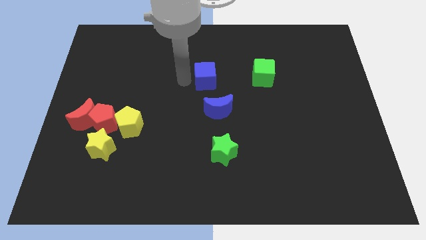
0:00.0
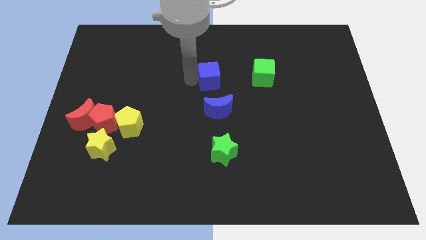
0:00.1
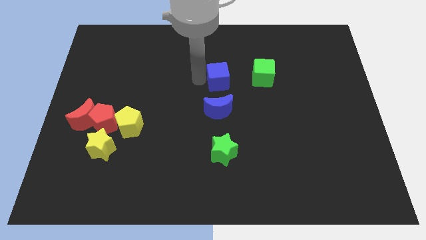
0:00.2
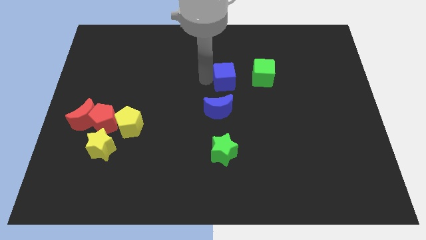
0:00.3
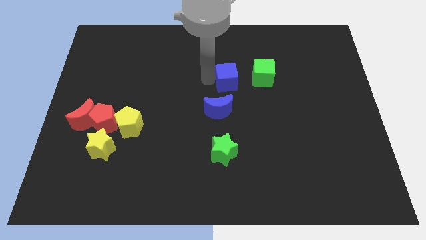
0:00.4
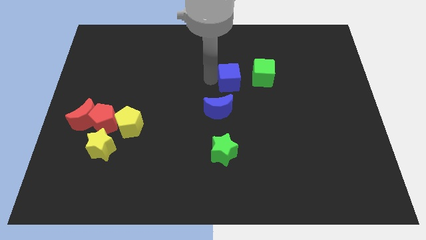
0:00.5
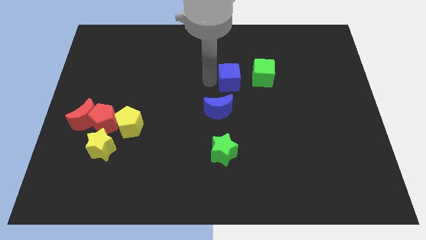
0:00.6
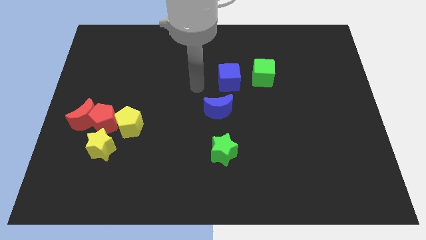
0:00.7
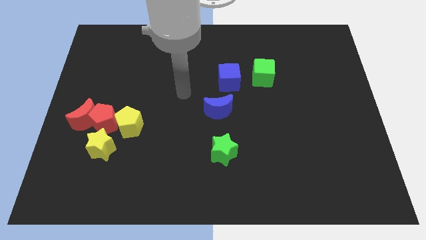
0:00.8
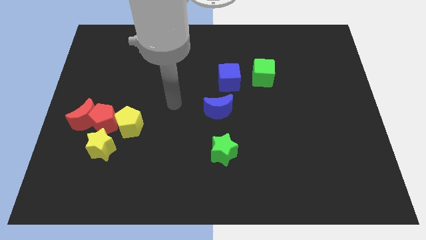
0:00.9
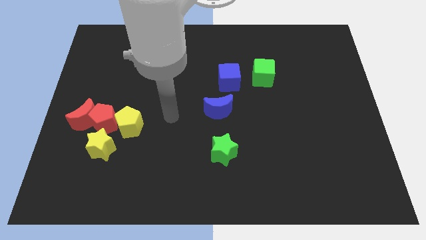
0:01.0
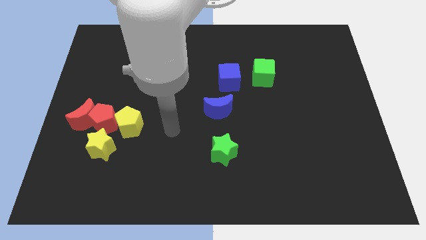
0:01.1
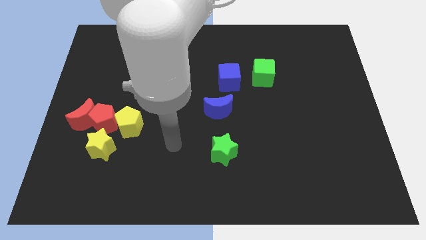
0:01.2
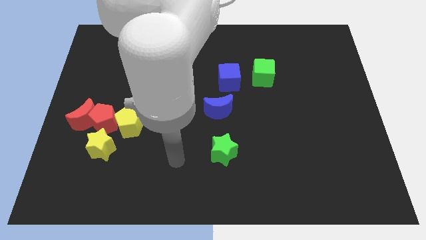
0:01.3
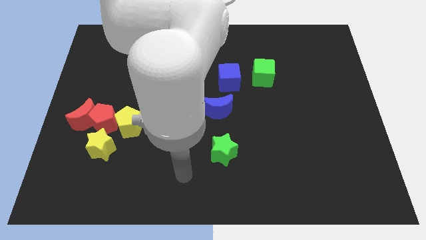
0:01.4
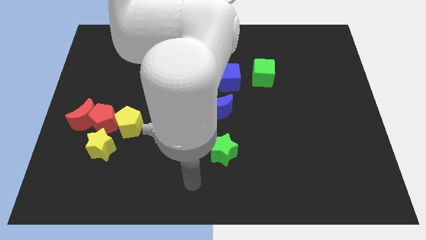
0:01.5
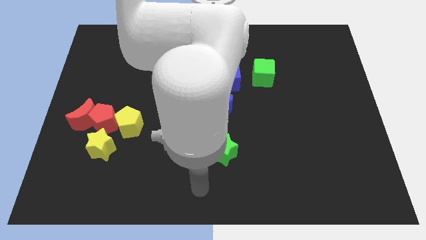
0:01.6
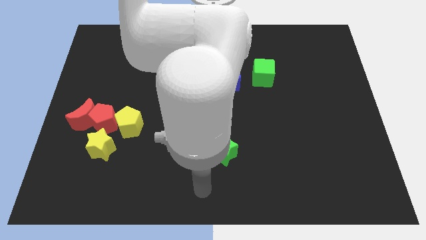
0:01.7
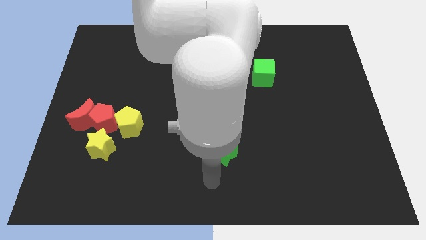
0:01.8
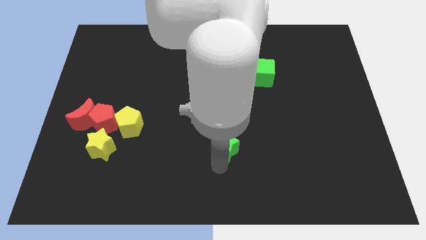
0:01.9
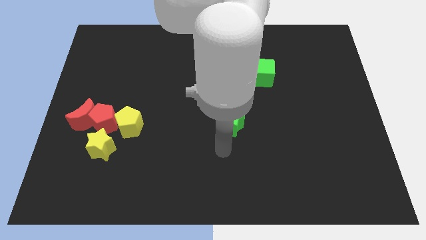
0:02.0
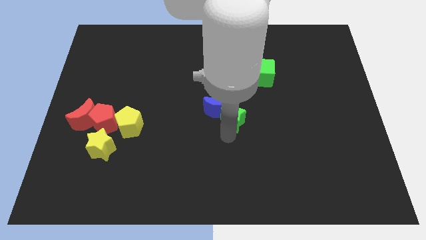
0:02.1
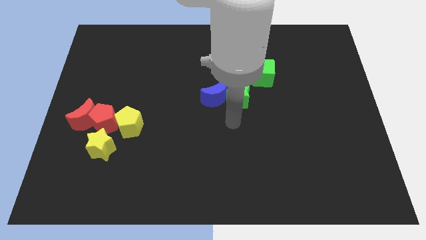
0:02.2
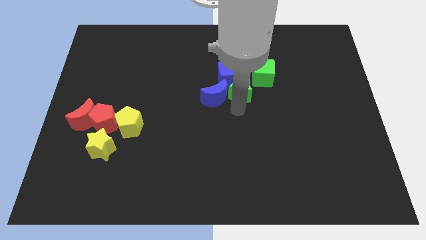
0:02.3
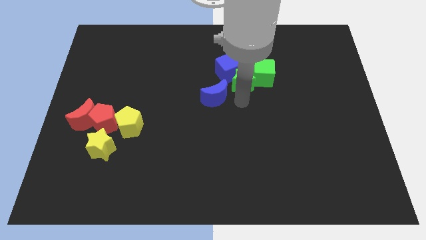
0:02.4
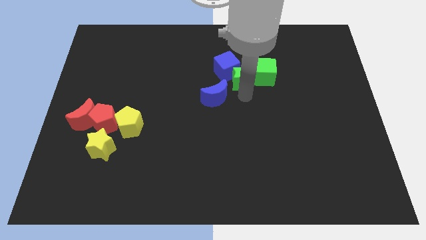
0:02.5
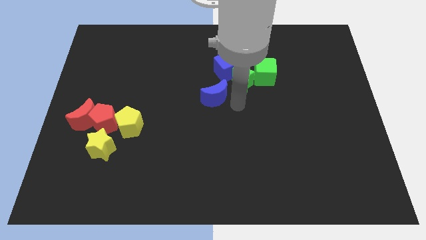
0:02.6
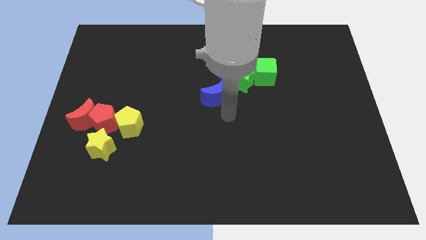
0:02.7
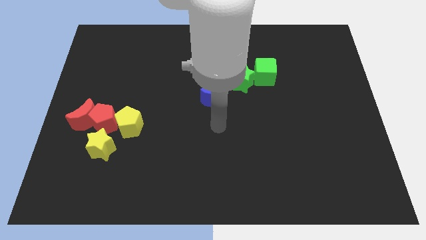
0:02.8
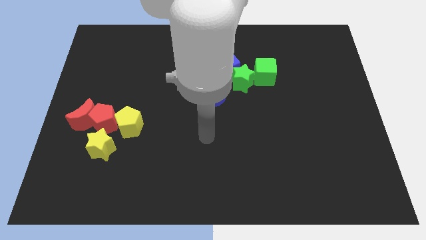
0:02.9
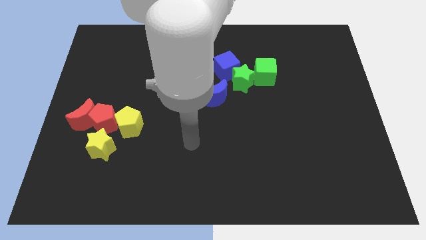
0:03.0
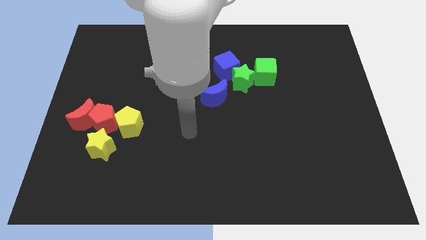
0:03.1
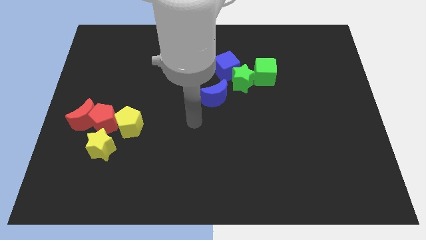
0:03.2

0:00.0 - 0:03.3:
place green star between green cube and blue cube

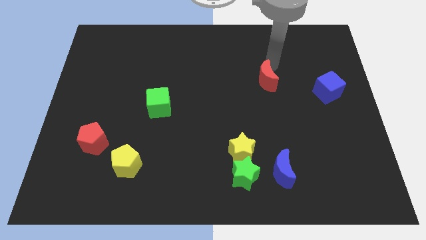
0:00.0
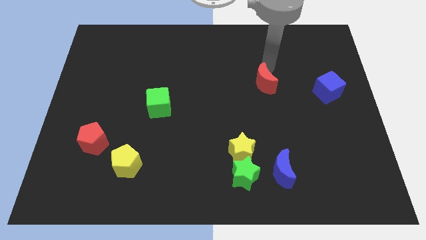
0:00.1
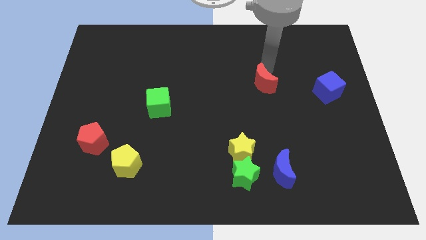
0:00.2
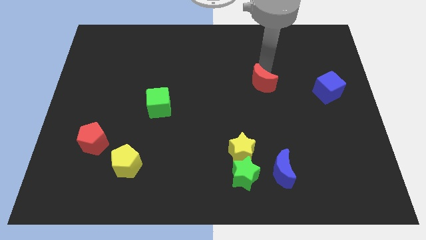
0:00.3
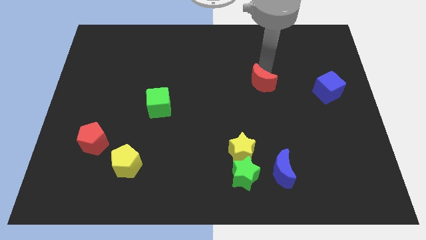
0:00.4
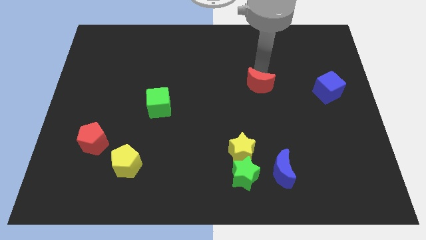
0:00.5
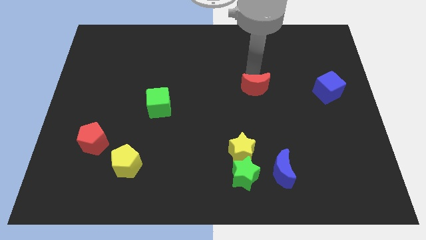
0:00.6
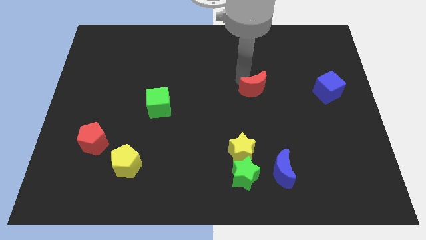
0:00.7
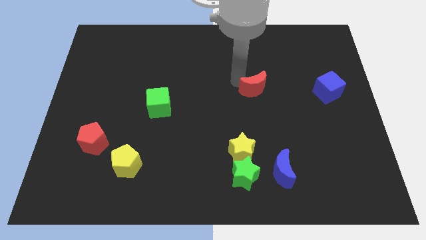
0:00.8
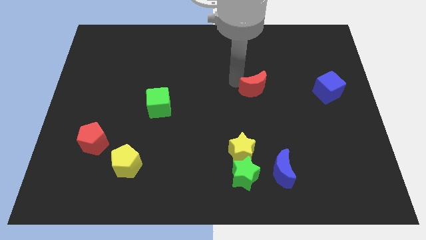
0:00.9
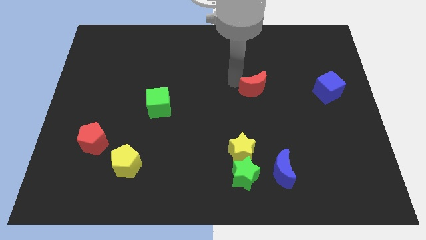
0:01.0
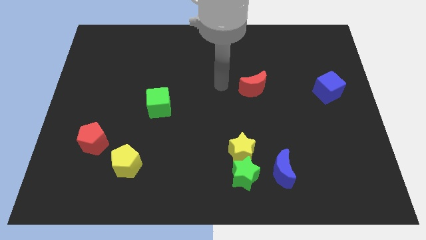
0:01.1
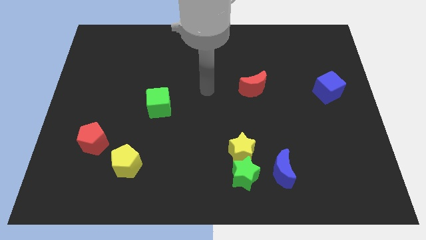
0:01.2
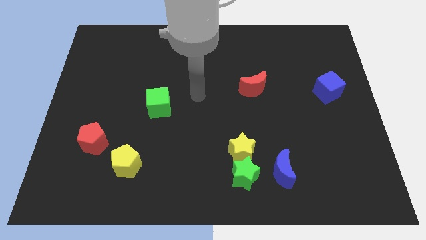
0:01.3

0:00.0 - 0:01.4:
move red moon slightly down

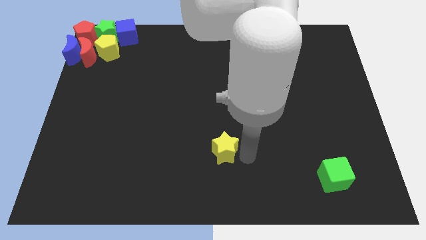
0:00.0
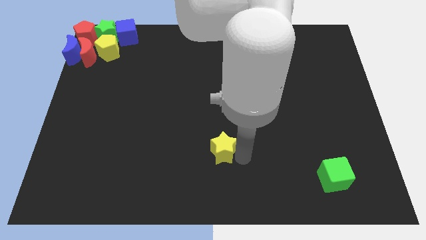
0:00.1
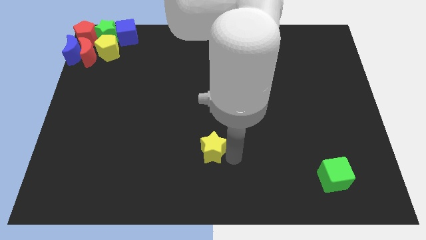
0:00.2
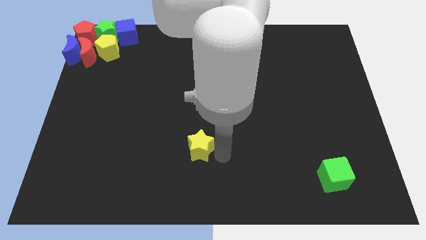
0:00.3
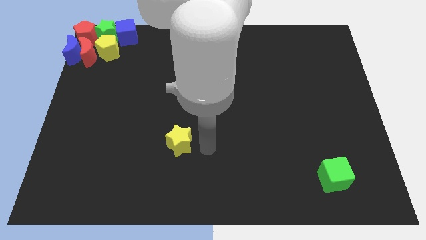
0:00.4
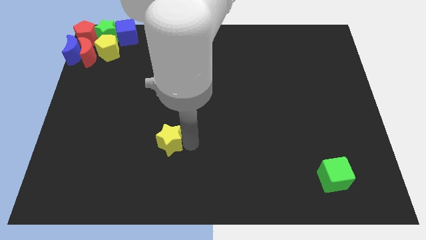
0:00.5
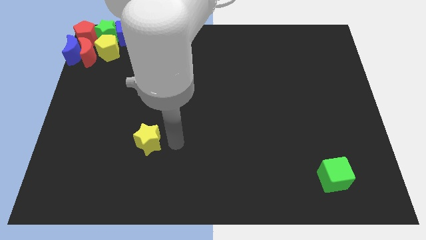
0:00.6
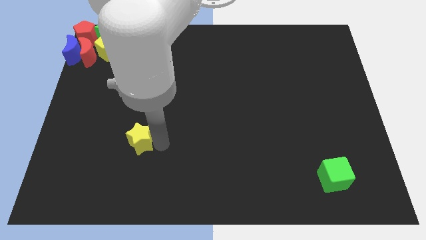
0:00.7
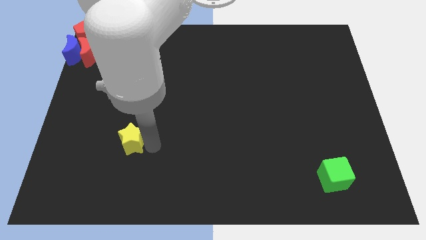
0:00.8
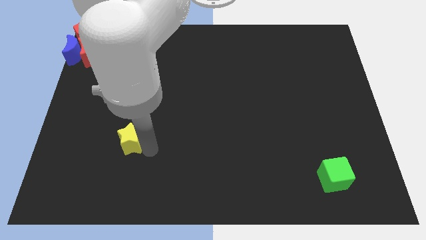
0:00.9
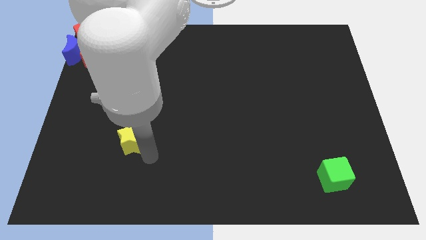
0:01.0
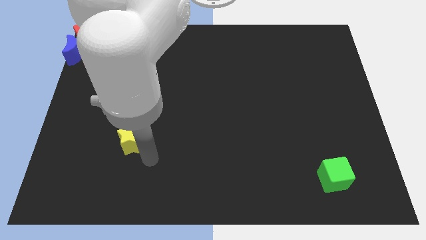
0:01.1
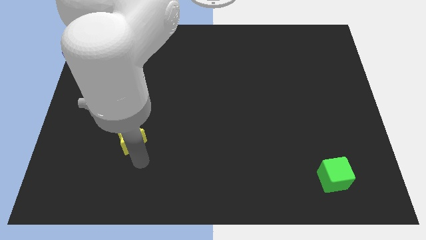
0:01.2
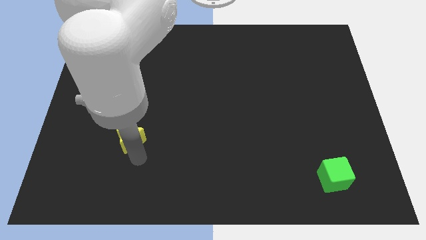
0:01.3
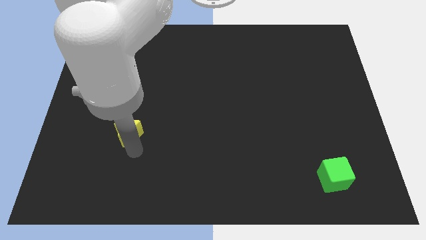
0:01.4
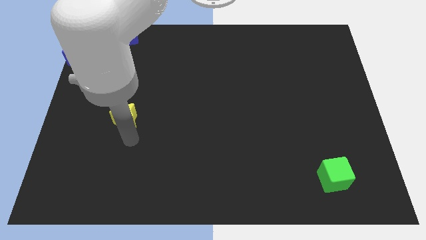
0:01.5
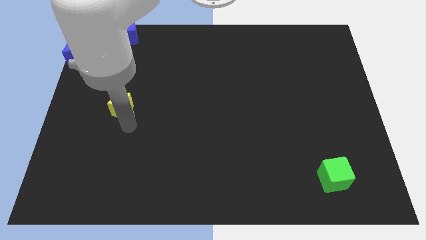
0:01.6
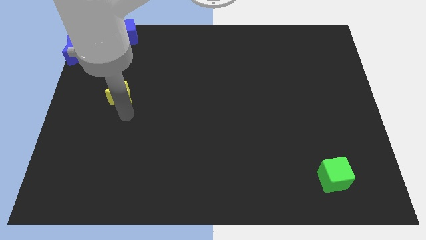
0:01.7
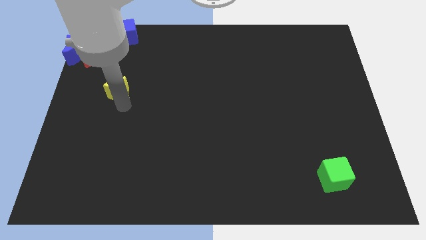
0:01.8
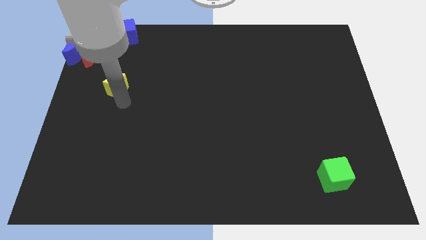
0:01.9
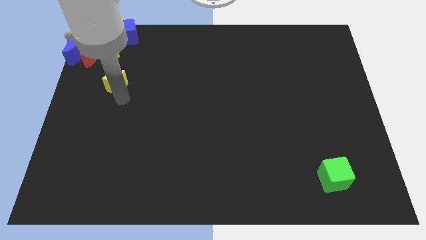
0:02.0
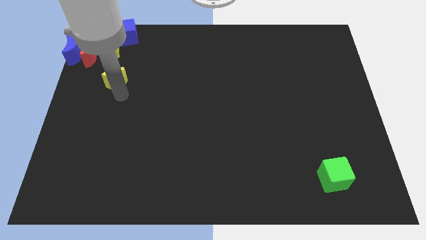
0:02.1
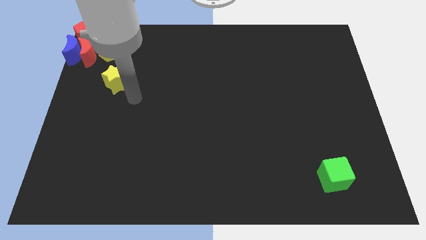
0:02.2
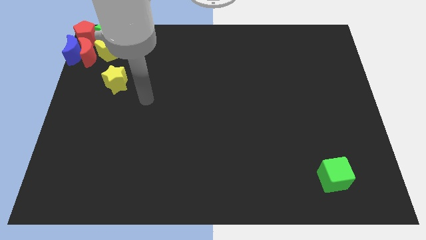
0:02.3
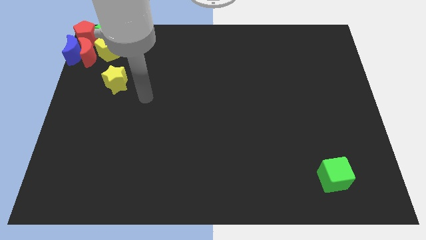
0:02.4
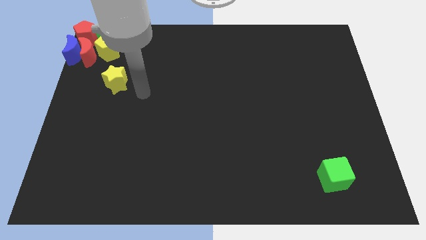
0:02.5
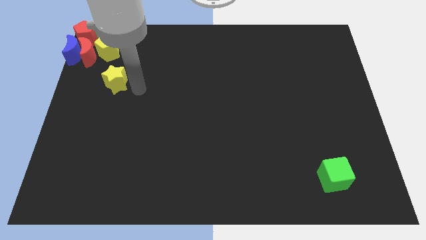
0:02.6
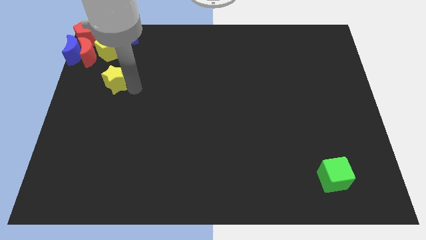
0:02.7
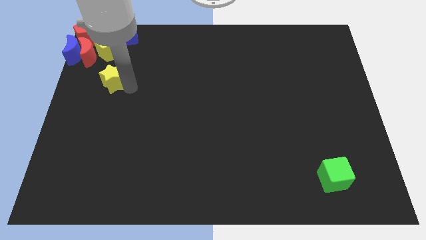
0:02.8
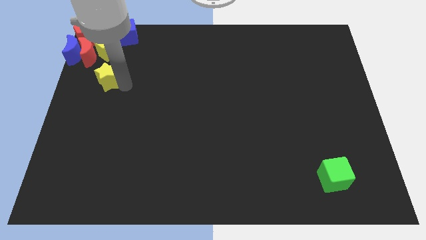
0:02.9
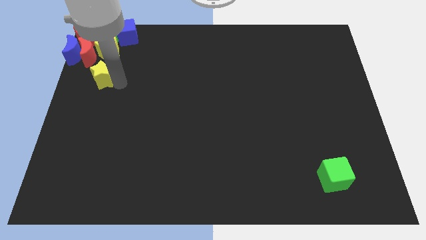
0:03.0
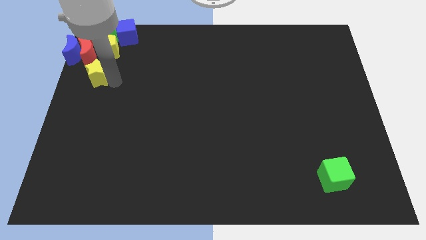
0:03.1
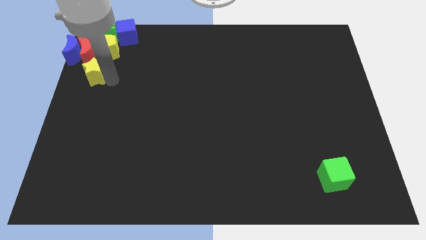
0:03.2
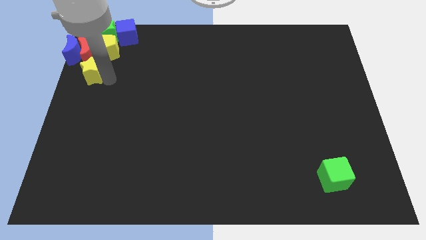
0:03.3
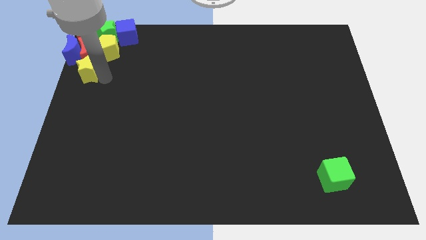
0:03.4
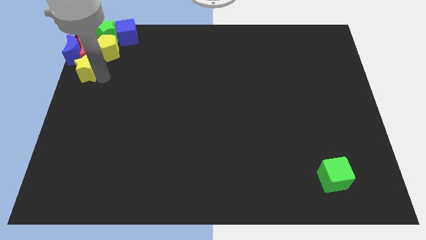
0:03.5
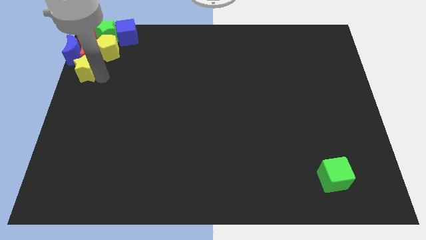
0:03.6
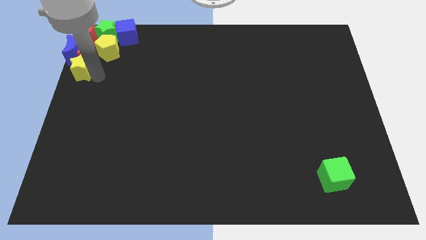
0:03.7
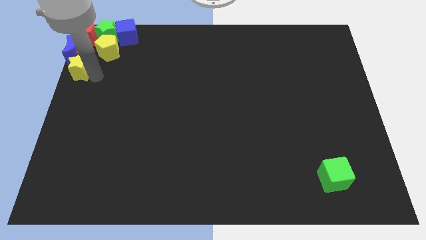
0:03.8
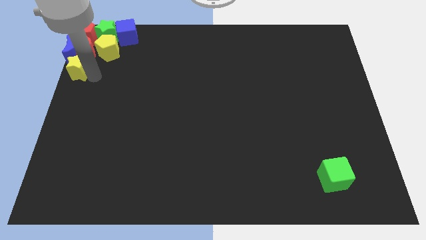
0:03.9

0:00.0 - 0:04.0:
push the yellow star into the bottom side of the red crescent

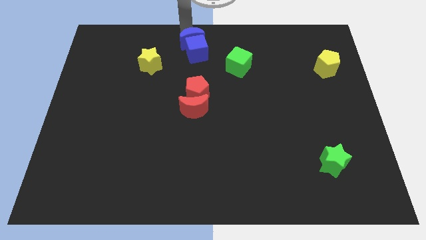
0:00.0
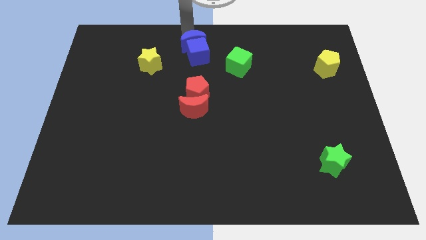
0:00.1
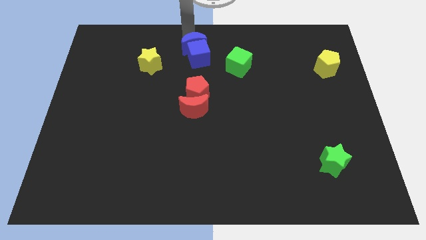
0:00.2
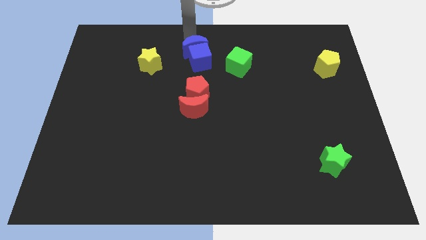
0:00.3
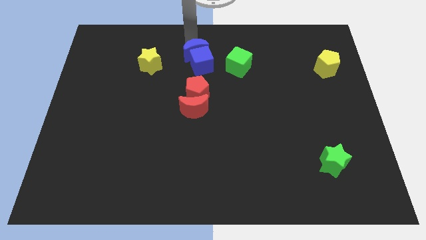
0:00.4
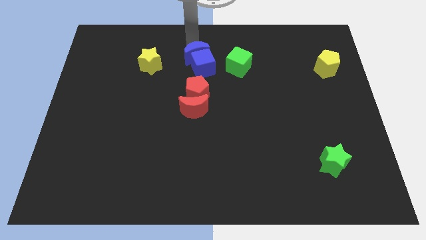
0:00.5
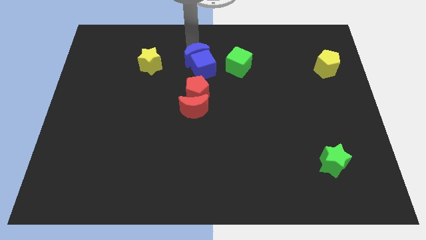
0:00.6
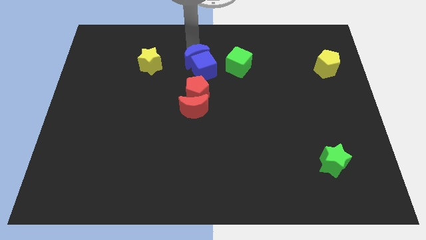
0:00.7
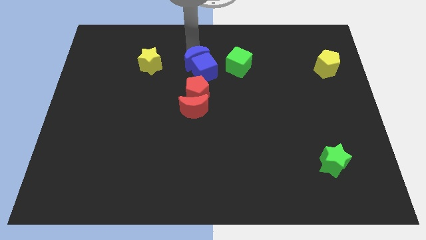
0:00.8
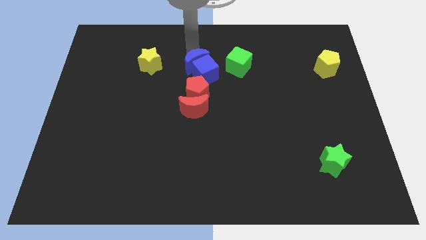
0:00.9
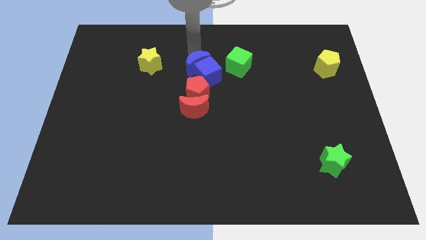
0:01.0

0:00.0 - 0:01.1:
move blue blocks into red blocks
